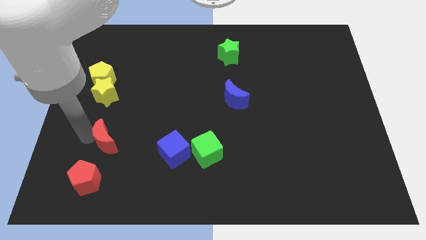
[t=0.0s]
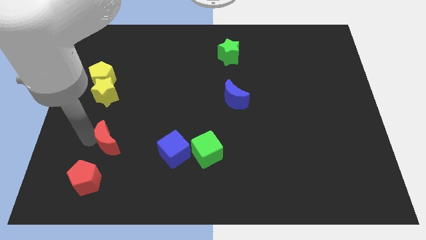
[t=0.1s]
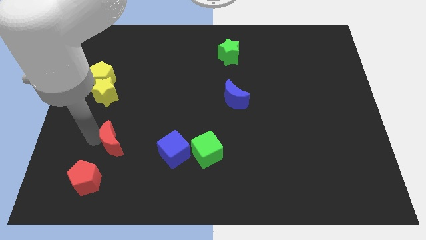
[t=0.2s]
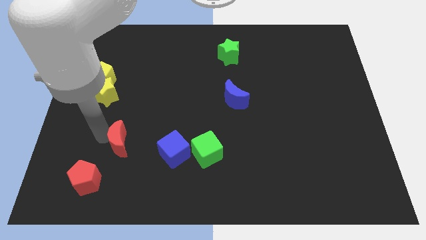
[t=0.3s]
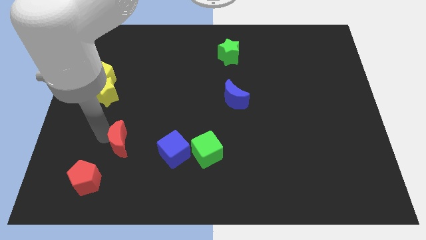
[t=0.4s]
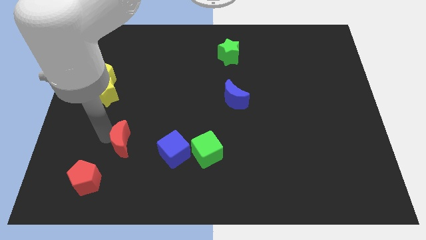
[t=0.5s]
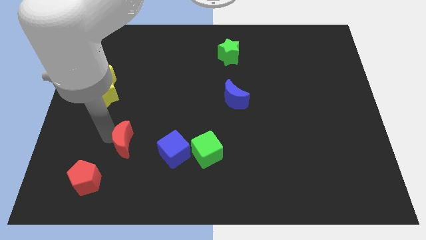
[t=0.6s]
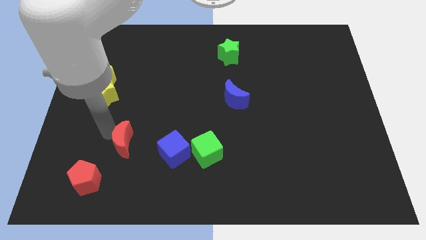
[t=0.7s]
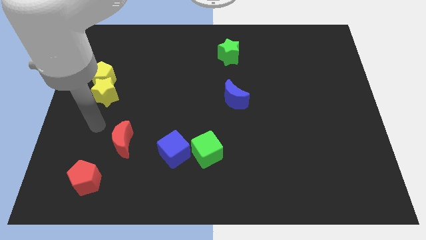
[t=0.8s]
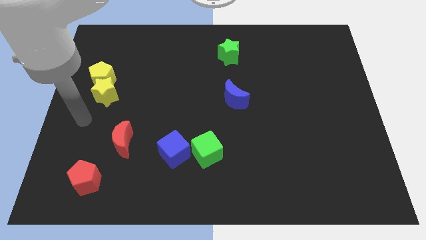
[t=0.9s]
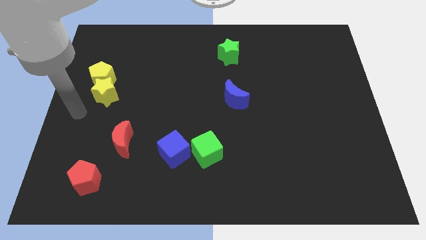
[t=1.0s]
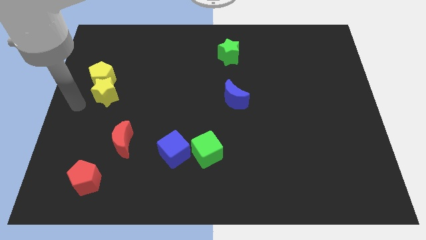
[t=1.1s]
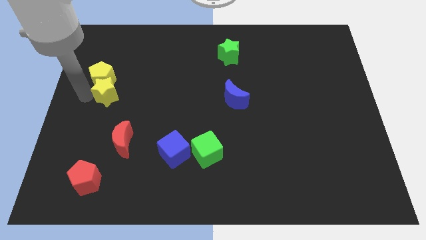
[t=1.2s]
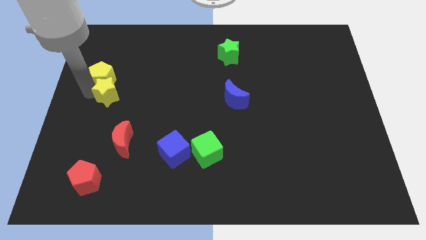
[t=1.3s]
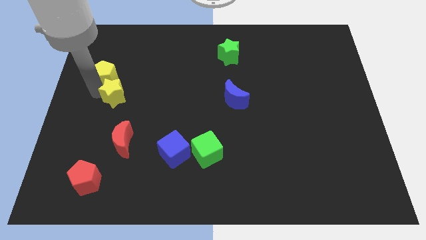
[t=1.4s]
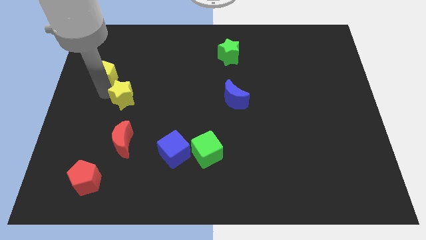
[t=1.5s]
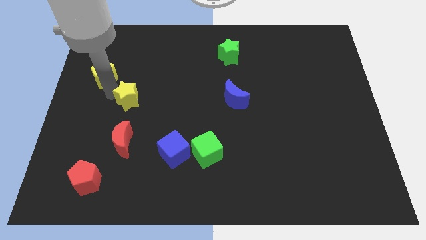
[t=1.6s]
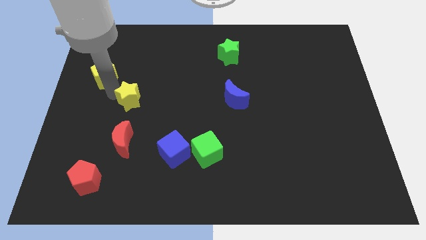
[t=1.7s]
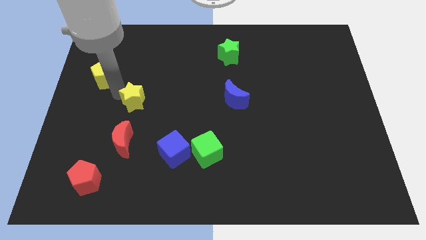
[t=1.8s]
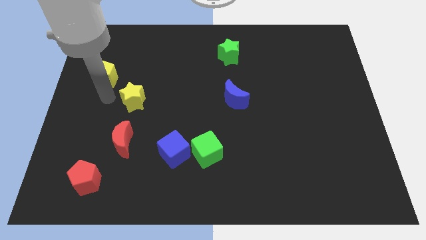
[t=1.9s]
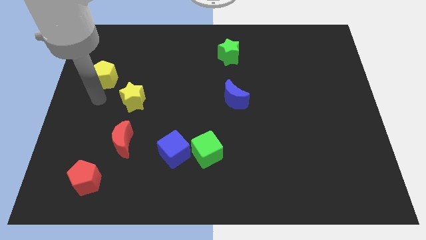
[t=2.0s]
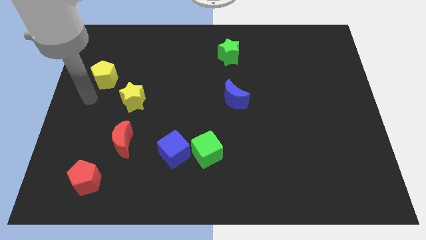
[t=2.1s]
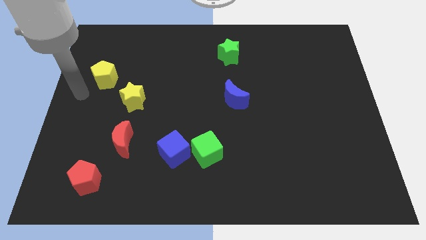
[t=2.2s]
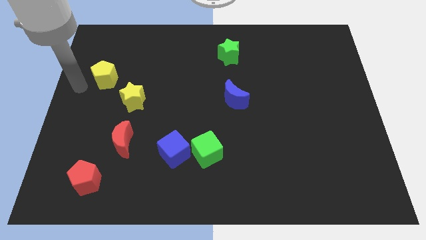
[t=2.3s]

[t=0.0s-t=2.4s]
adjust red moon and yellow star to right in a vertical line

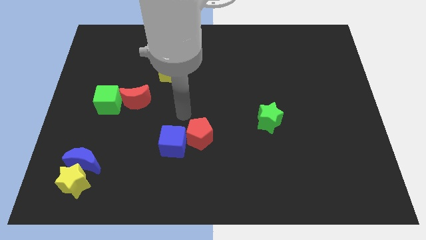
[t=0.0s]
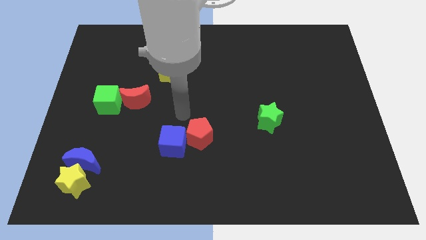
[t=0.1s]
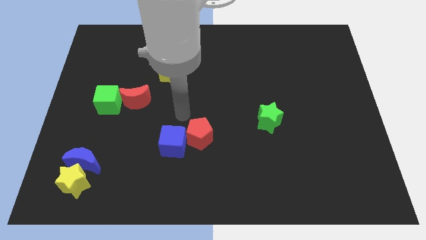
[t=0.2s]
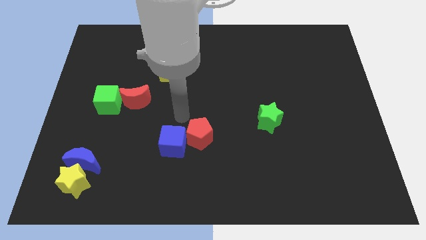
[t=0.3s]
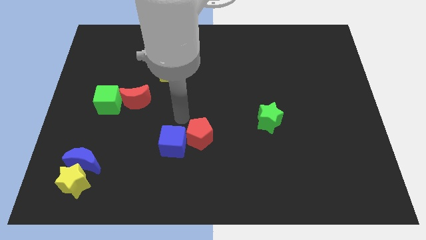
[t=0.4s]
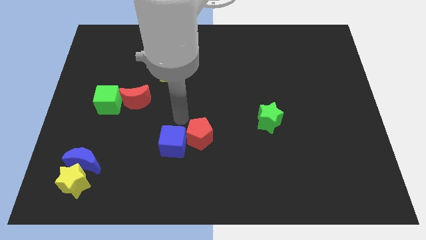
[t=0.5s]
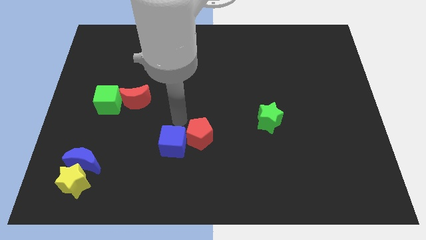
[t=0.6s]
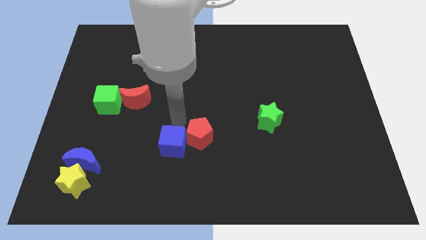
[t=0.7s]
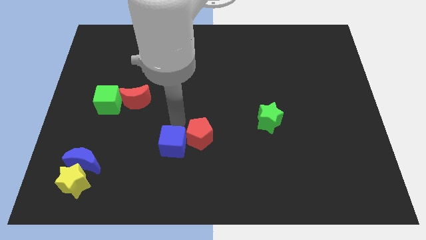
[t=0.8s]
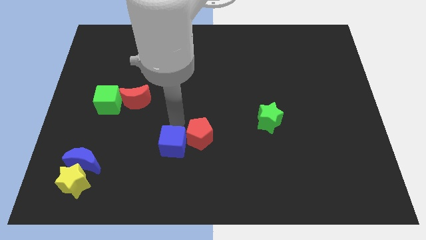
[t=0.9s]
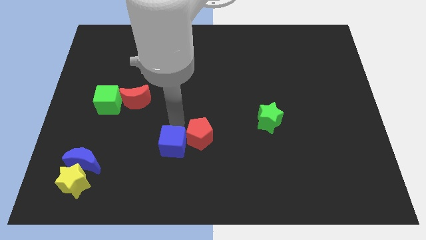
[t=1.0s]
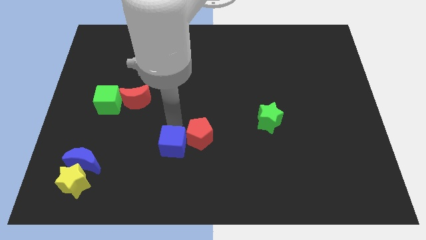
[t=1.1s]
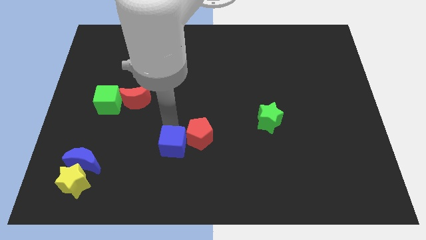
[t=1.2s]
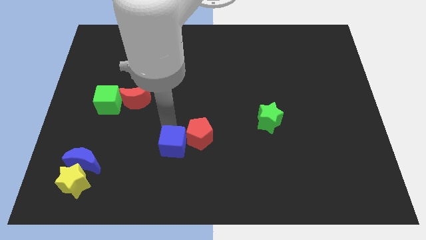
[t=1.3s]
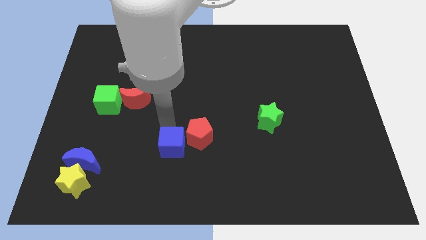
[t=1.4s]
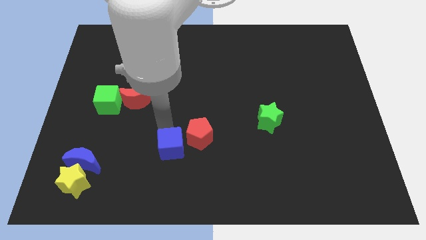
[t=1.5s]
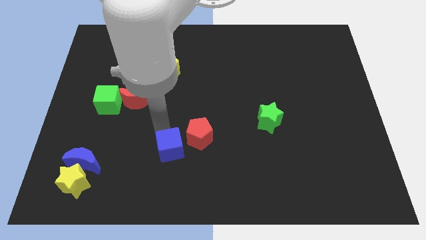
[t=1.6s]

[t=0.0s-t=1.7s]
place the arm on top of blue cube

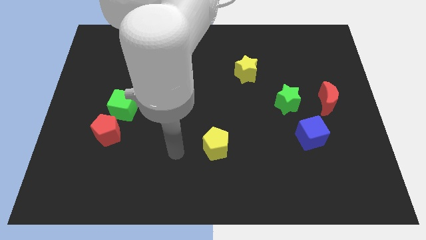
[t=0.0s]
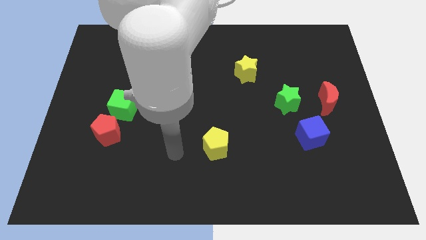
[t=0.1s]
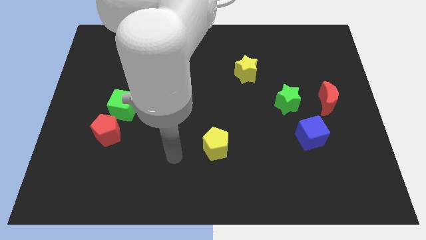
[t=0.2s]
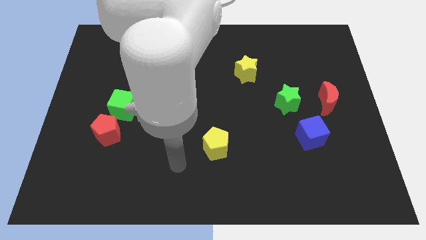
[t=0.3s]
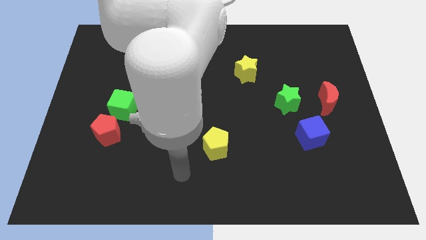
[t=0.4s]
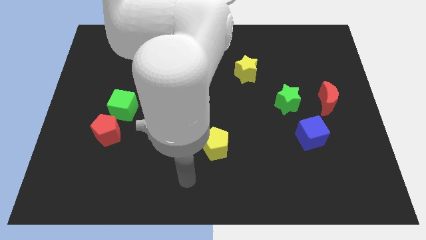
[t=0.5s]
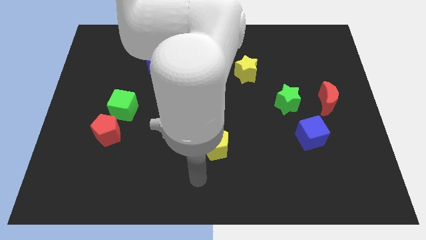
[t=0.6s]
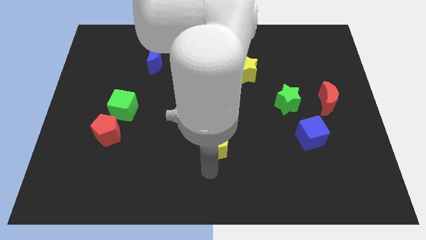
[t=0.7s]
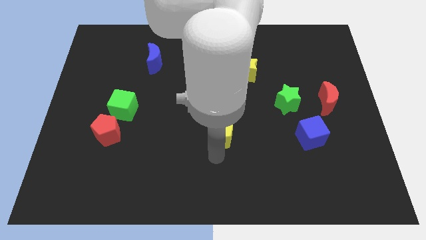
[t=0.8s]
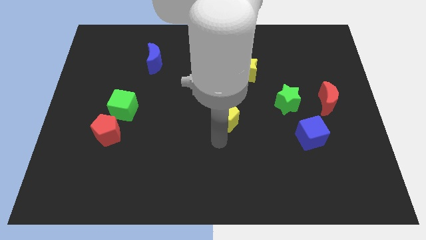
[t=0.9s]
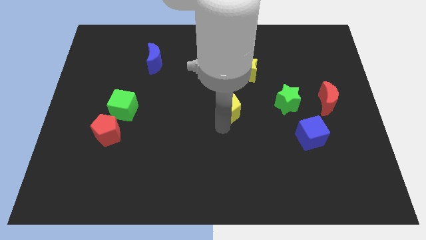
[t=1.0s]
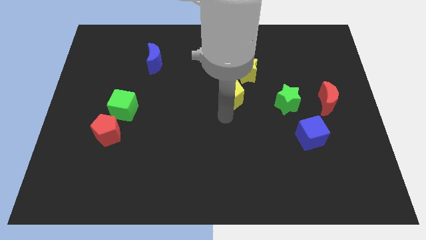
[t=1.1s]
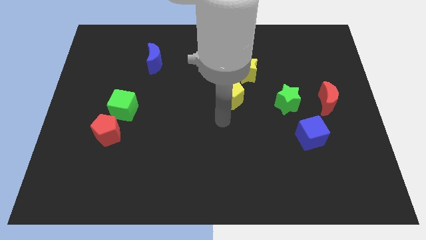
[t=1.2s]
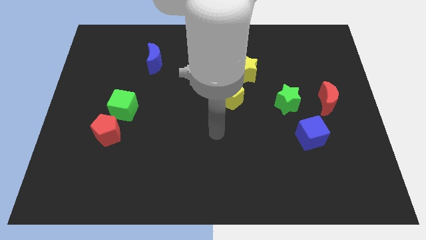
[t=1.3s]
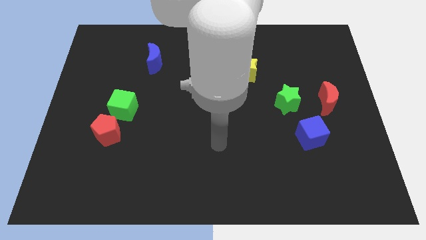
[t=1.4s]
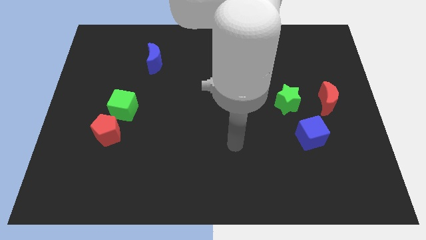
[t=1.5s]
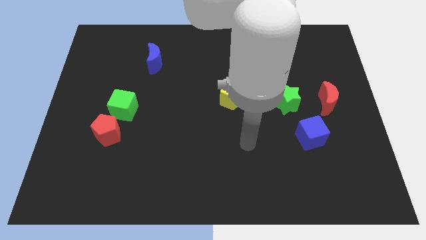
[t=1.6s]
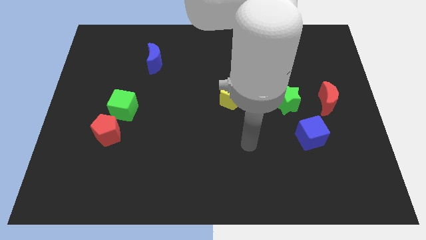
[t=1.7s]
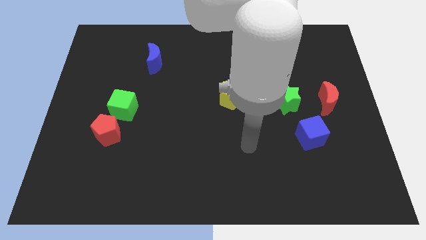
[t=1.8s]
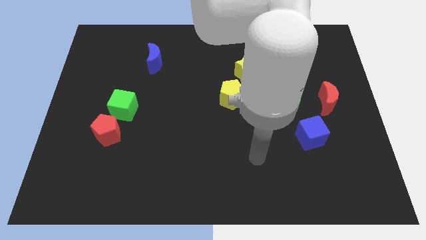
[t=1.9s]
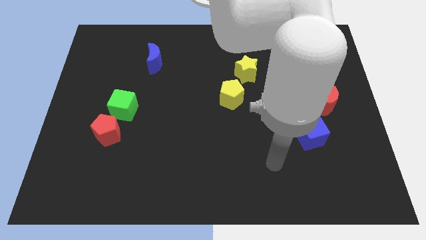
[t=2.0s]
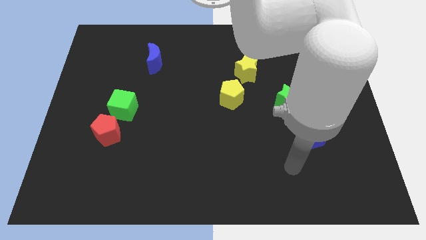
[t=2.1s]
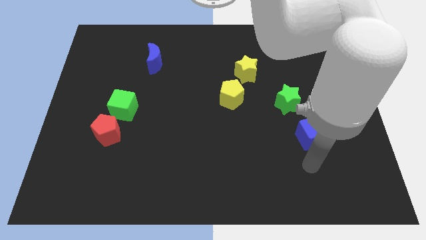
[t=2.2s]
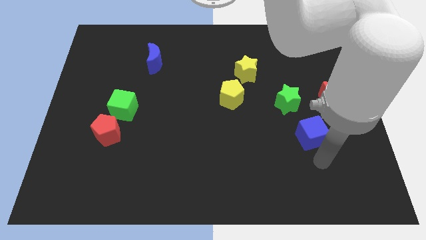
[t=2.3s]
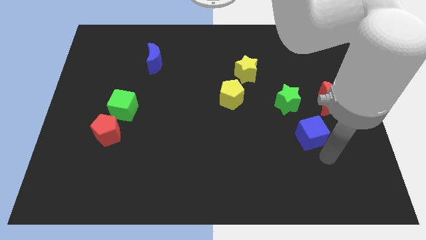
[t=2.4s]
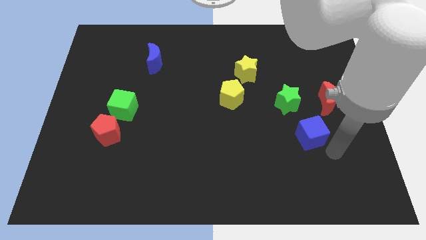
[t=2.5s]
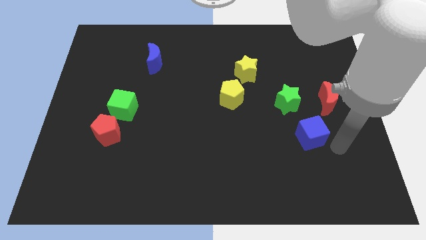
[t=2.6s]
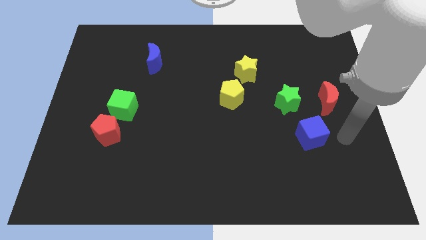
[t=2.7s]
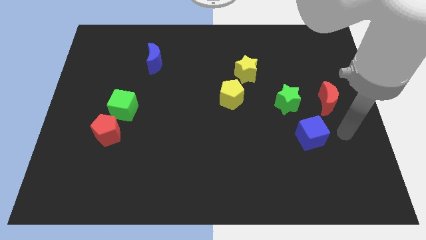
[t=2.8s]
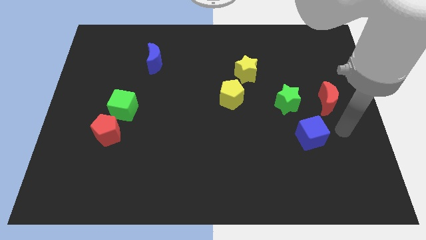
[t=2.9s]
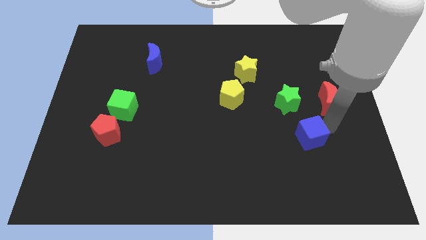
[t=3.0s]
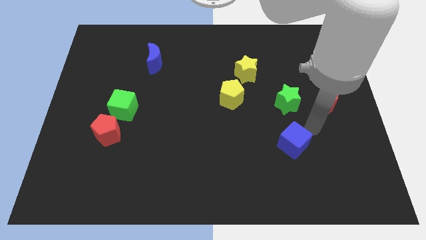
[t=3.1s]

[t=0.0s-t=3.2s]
move yellow pentagon diagonally top left to the blue cube

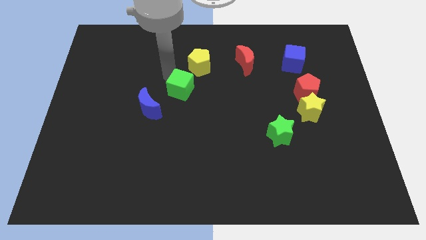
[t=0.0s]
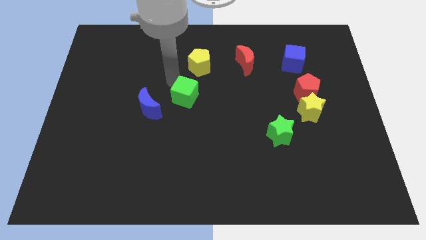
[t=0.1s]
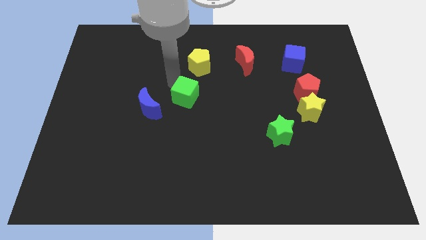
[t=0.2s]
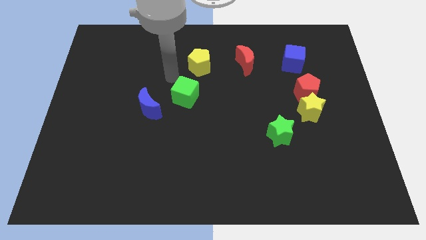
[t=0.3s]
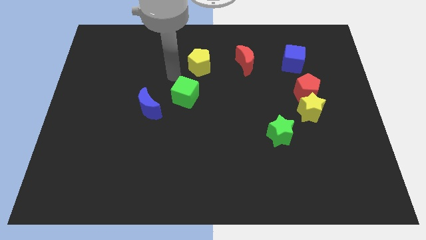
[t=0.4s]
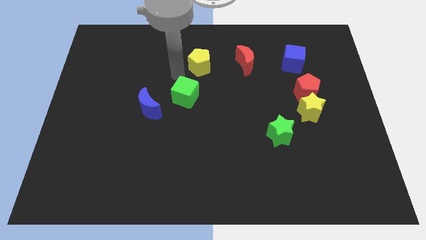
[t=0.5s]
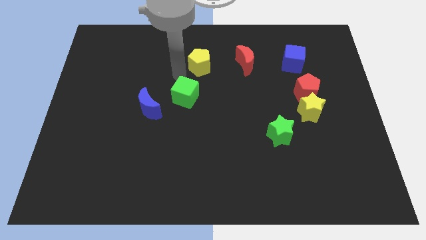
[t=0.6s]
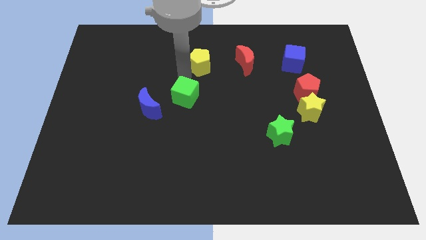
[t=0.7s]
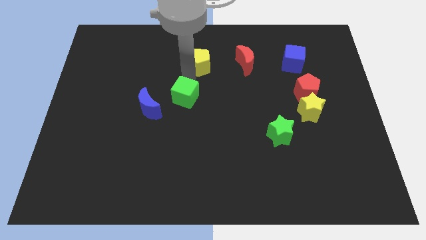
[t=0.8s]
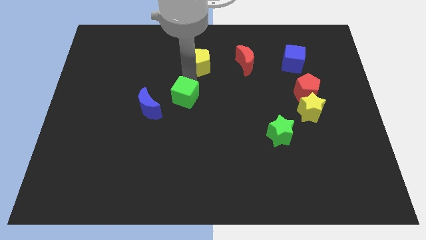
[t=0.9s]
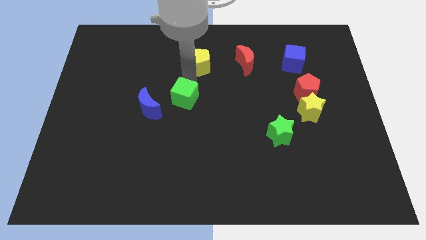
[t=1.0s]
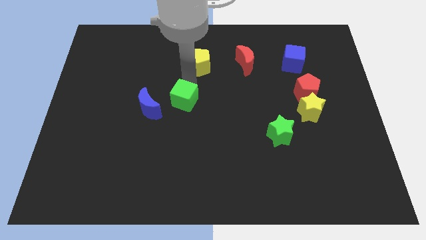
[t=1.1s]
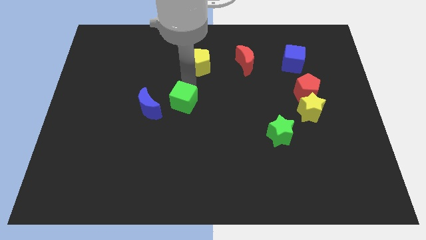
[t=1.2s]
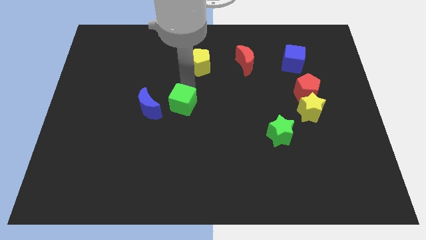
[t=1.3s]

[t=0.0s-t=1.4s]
place the green cube to the right of the blue moon

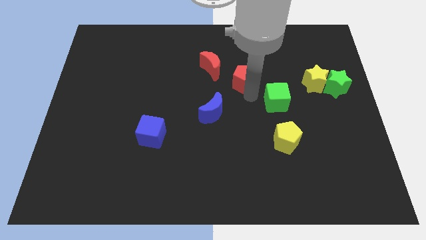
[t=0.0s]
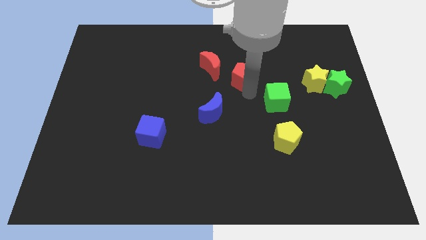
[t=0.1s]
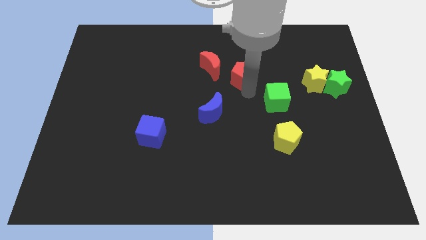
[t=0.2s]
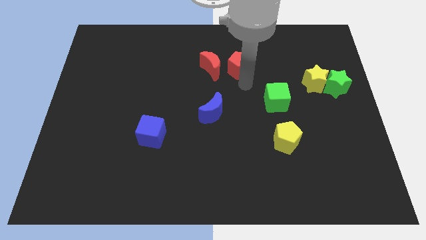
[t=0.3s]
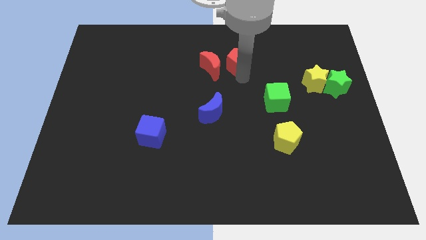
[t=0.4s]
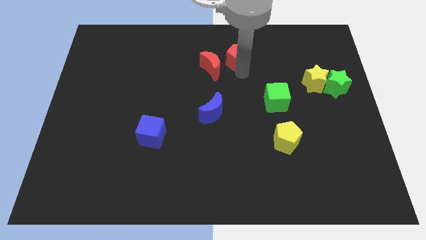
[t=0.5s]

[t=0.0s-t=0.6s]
push red pentagon to the right of the red crescent
